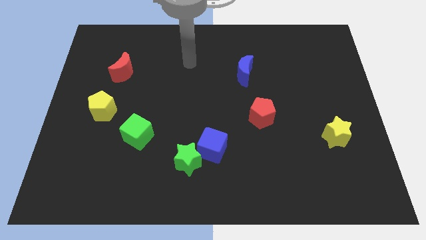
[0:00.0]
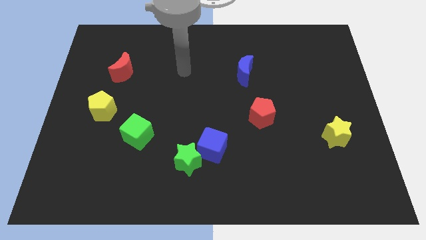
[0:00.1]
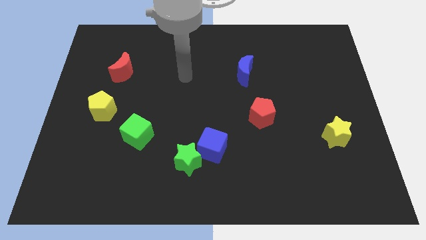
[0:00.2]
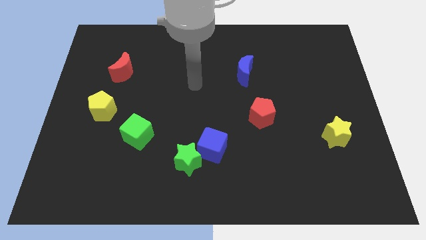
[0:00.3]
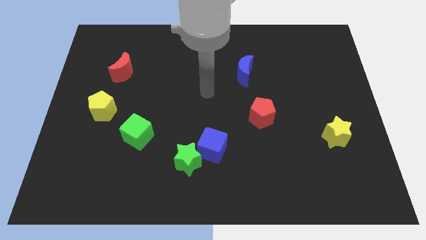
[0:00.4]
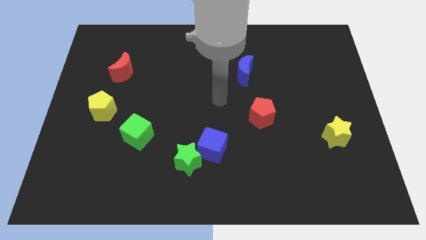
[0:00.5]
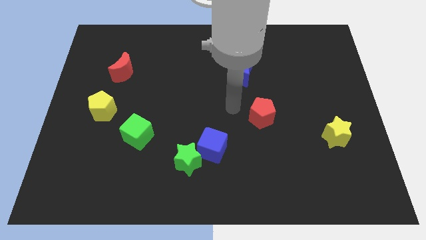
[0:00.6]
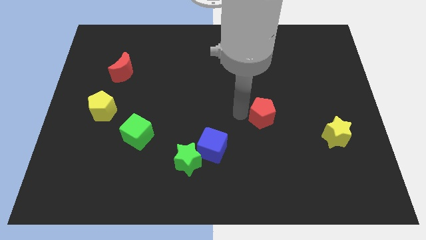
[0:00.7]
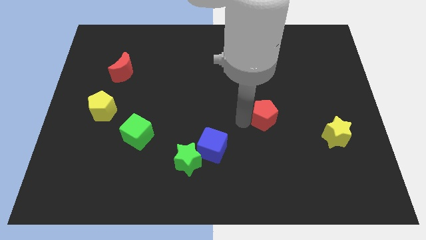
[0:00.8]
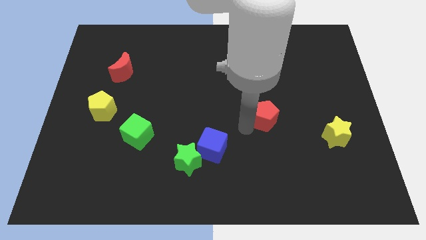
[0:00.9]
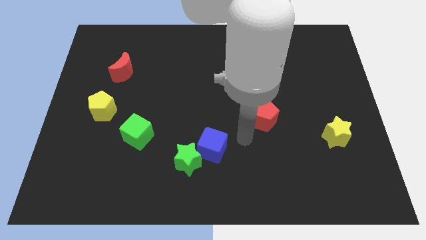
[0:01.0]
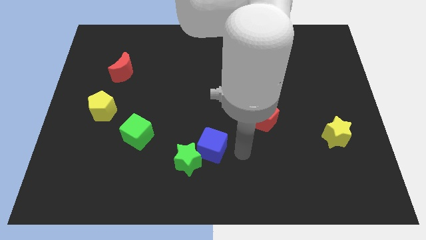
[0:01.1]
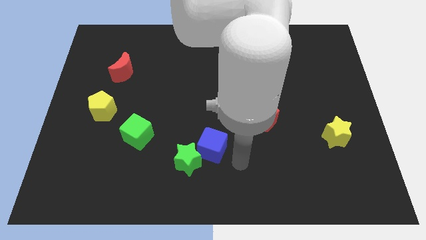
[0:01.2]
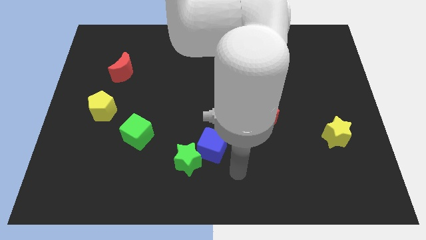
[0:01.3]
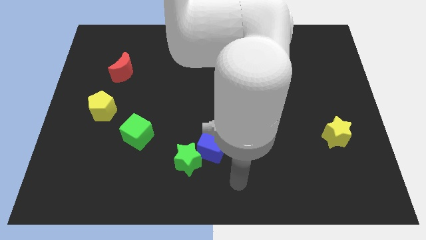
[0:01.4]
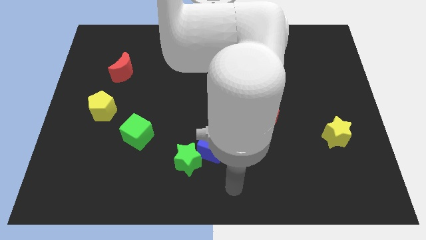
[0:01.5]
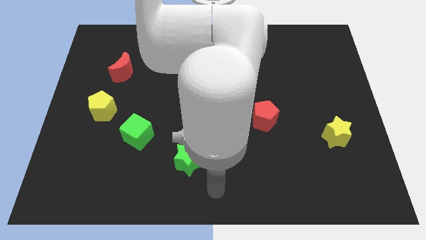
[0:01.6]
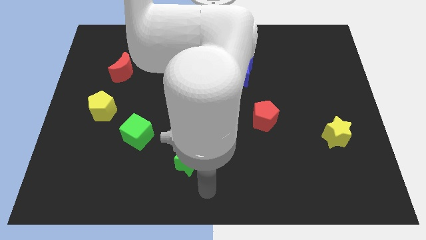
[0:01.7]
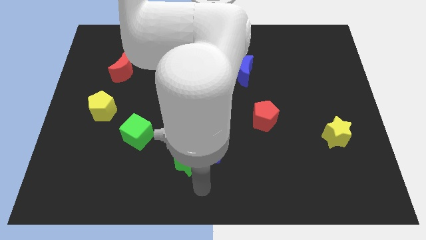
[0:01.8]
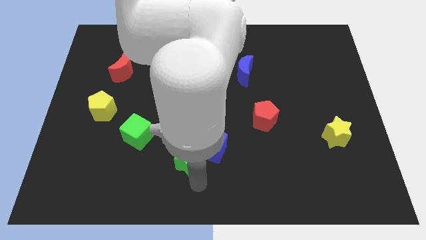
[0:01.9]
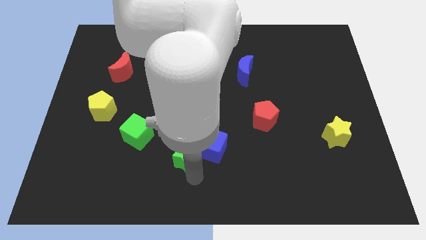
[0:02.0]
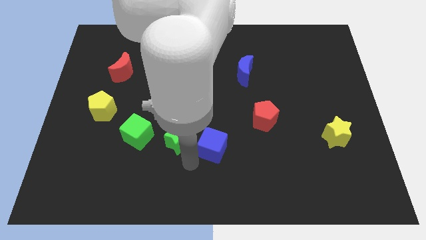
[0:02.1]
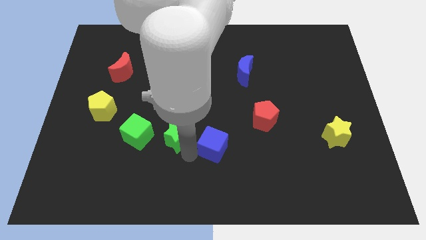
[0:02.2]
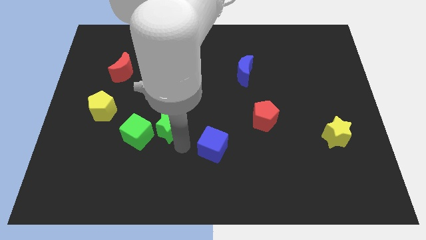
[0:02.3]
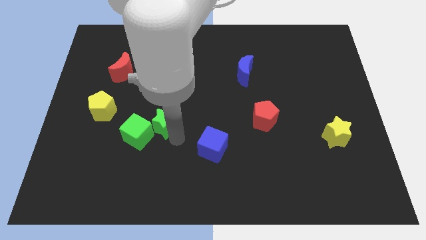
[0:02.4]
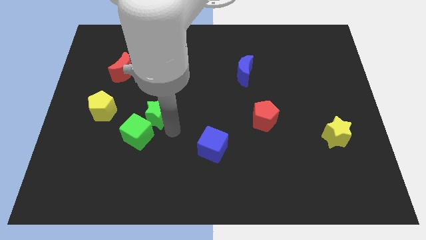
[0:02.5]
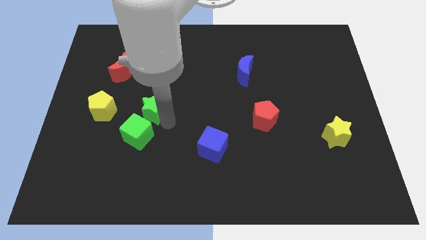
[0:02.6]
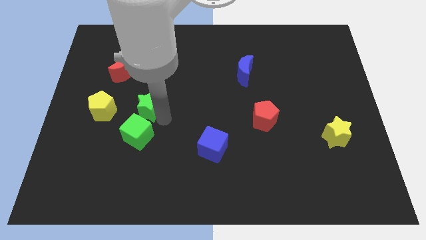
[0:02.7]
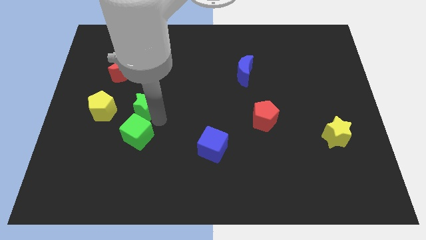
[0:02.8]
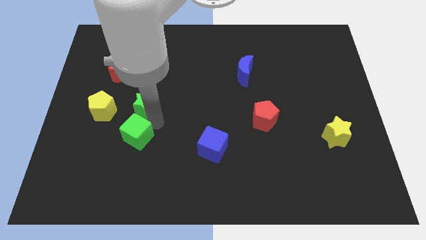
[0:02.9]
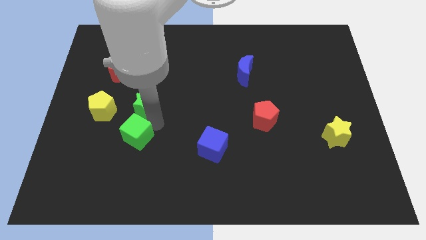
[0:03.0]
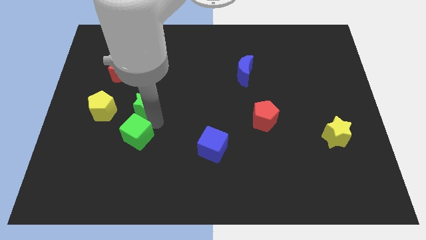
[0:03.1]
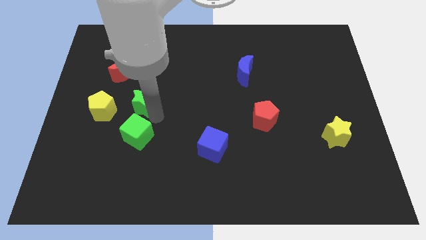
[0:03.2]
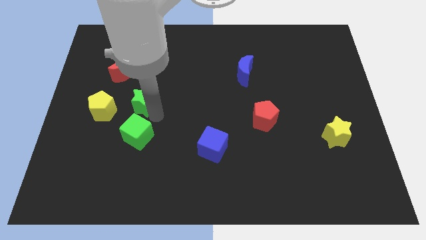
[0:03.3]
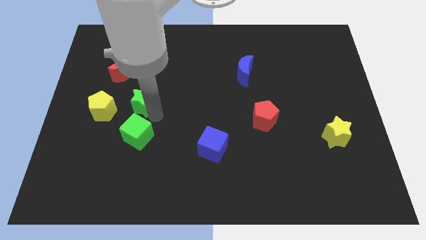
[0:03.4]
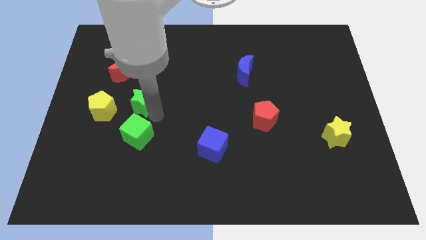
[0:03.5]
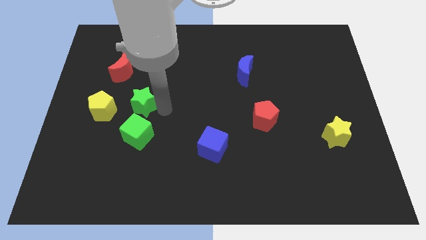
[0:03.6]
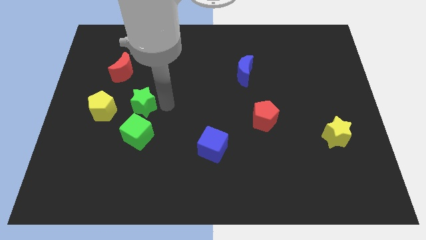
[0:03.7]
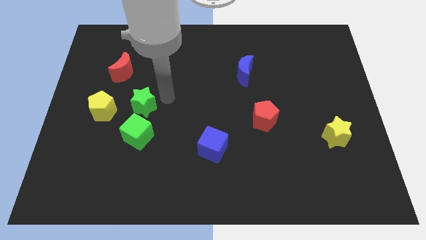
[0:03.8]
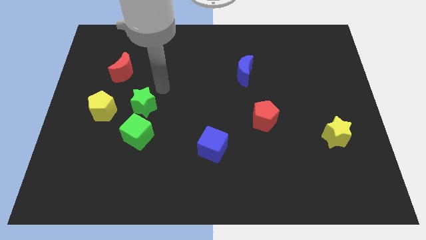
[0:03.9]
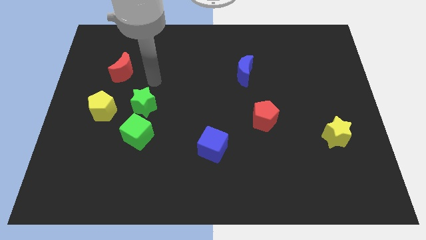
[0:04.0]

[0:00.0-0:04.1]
slide the green star to right of yellow pentagon

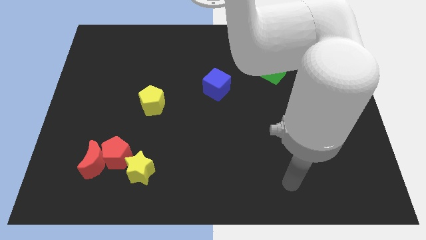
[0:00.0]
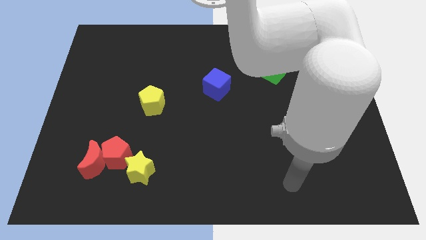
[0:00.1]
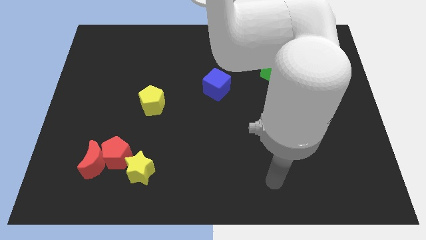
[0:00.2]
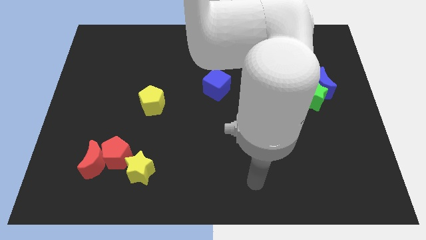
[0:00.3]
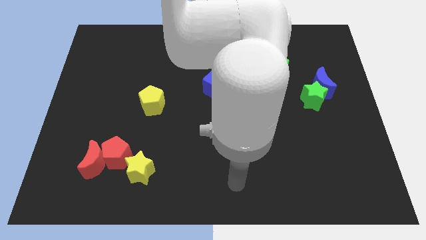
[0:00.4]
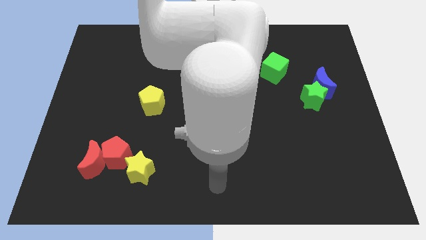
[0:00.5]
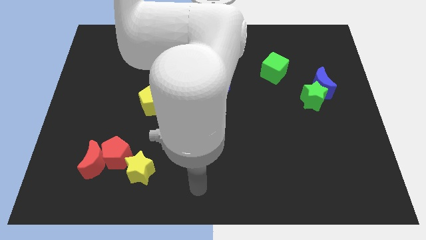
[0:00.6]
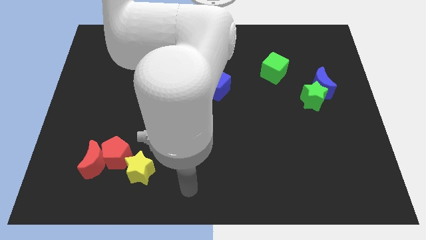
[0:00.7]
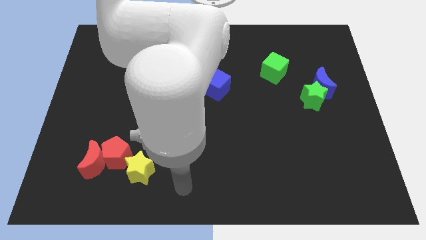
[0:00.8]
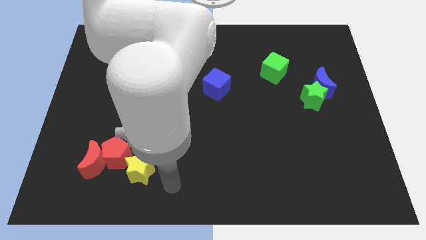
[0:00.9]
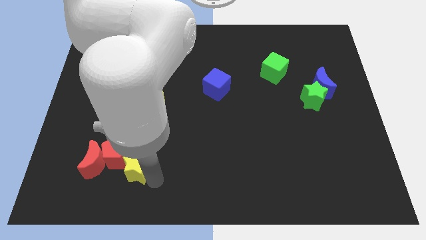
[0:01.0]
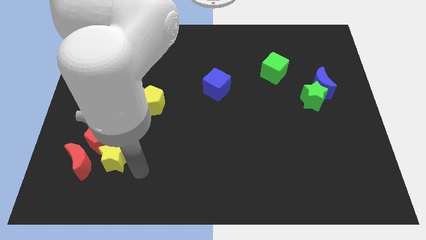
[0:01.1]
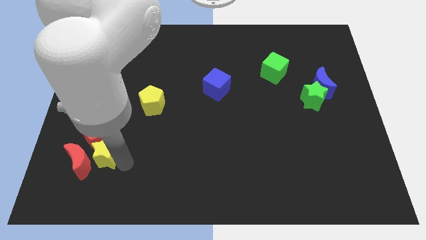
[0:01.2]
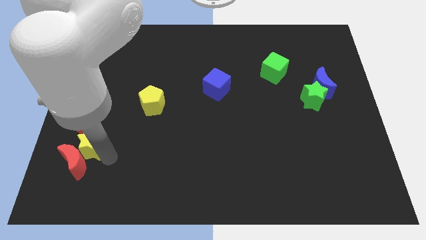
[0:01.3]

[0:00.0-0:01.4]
push yellow star towards red pentagon

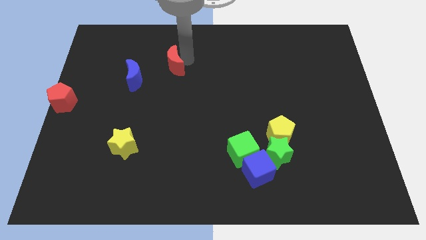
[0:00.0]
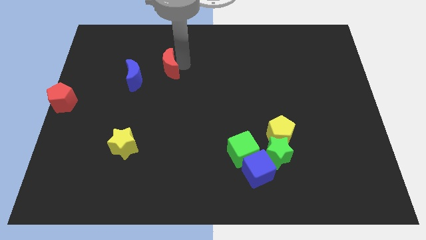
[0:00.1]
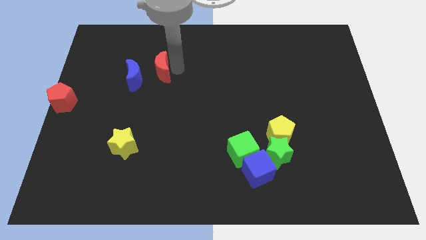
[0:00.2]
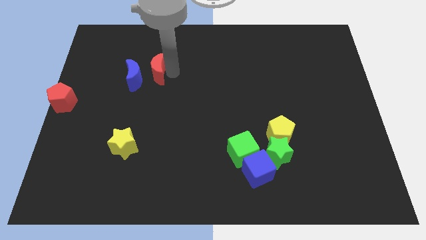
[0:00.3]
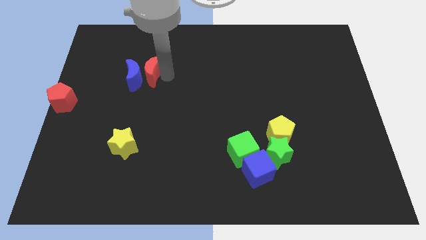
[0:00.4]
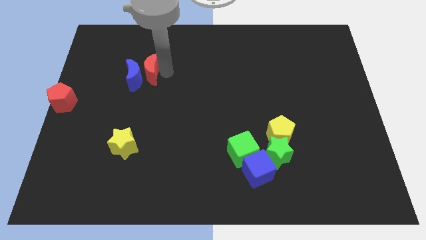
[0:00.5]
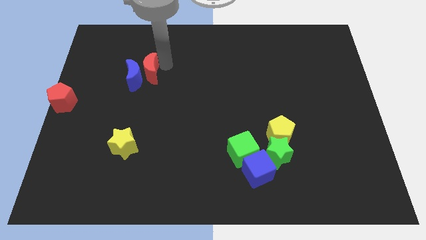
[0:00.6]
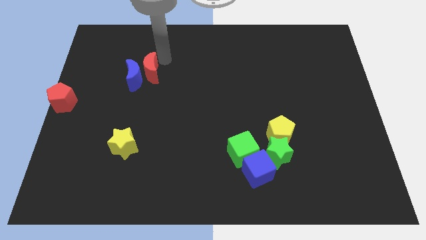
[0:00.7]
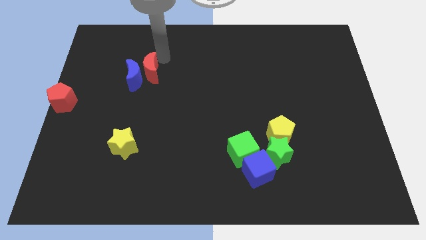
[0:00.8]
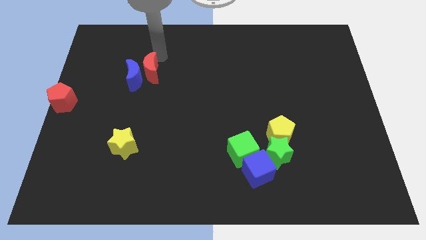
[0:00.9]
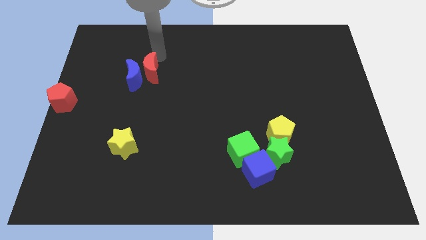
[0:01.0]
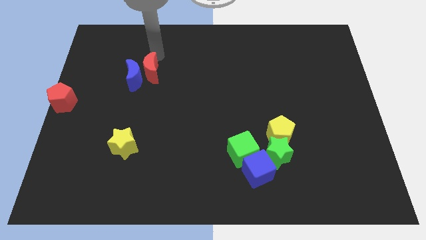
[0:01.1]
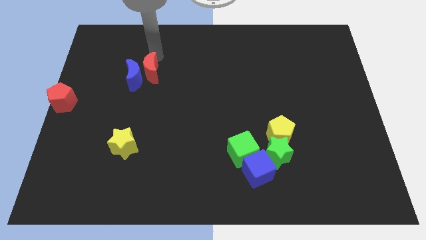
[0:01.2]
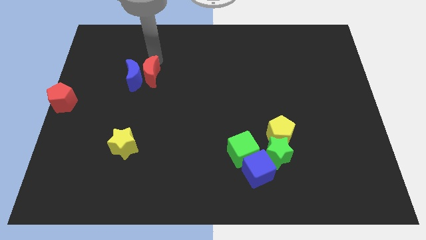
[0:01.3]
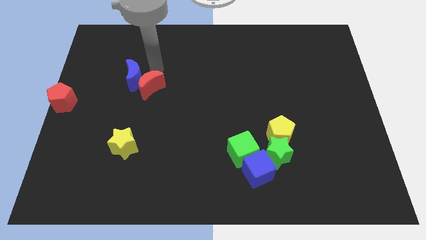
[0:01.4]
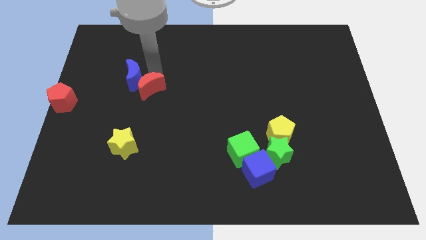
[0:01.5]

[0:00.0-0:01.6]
move the red crescent towards blue crescent

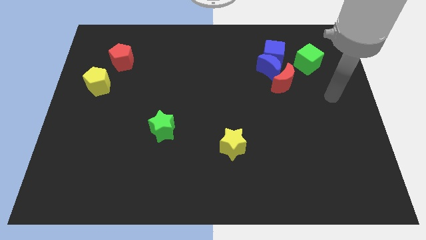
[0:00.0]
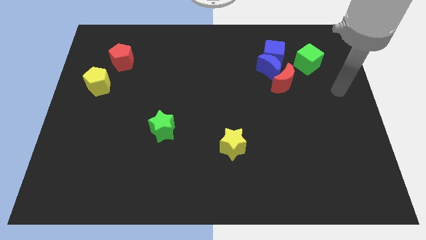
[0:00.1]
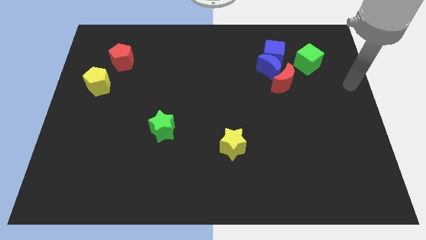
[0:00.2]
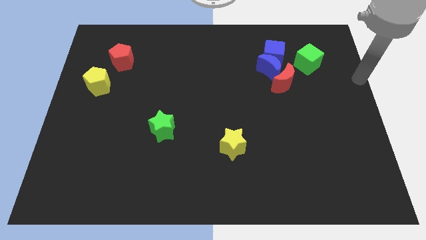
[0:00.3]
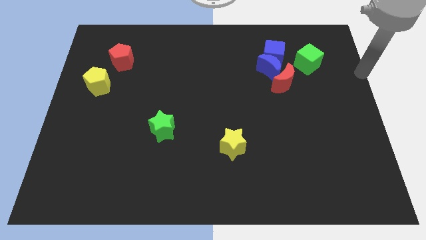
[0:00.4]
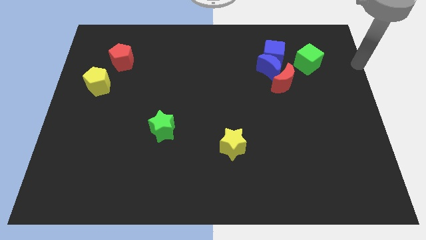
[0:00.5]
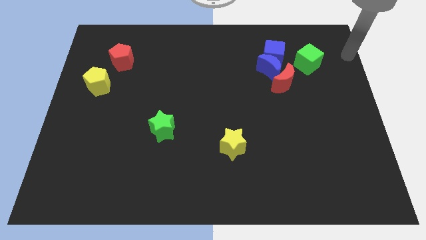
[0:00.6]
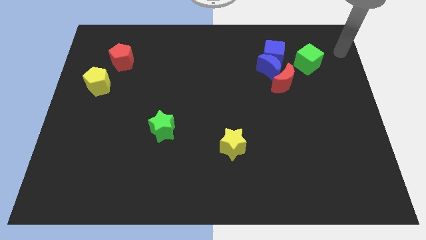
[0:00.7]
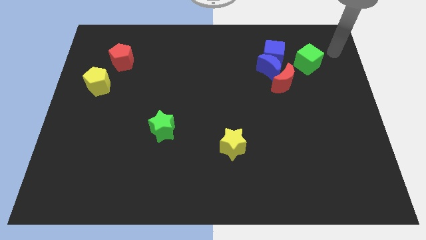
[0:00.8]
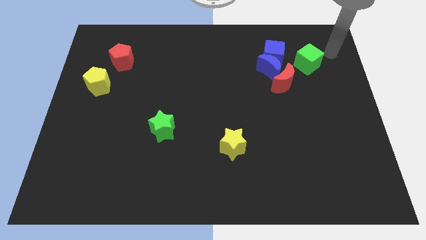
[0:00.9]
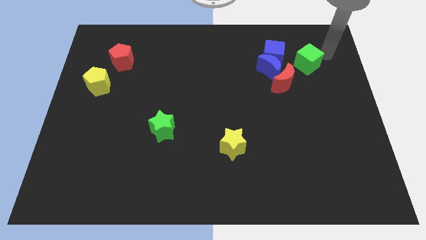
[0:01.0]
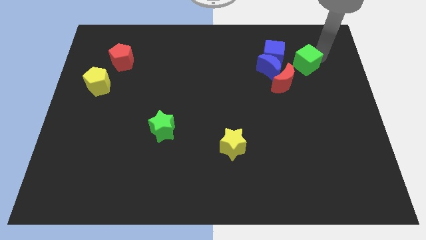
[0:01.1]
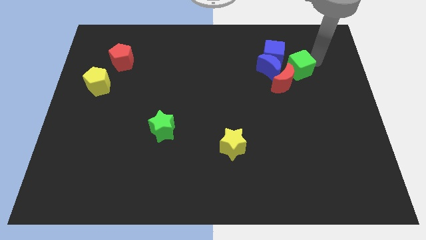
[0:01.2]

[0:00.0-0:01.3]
tap the top right side of the green cube

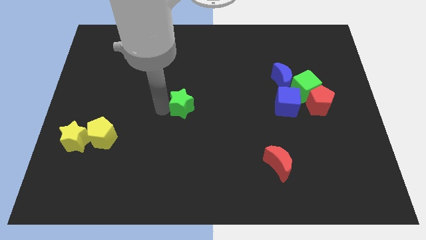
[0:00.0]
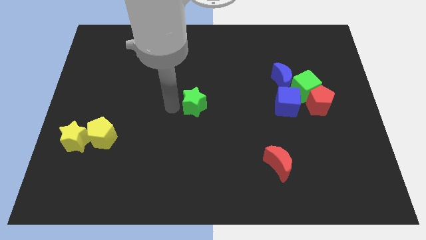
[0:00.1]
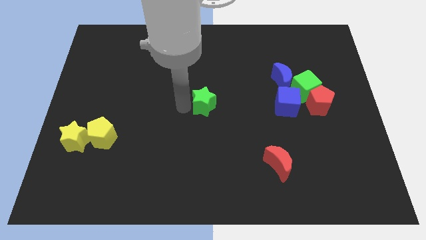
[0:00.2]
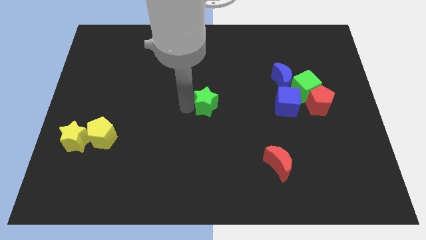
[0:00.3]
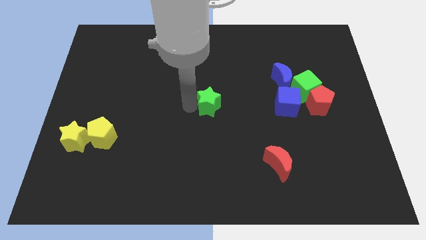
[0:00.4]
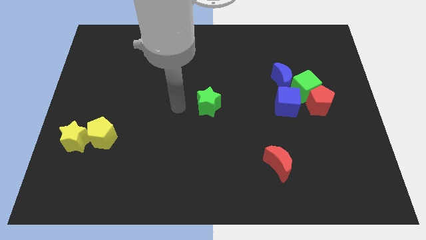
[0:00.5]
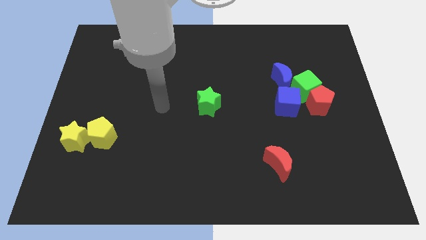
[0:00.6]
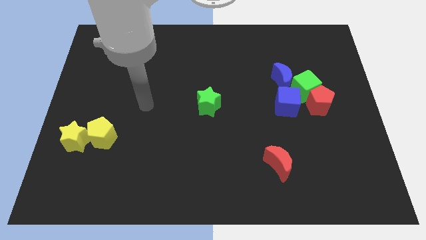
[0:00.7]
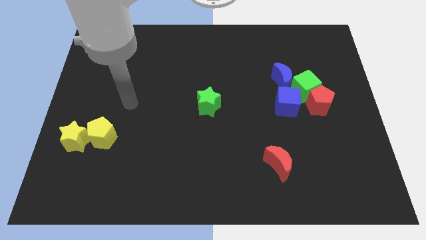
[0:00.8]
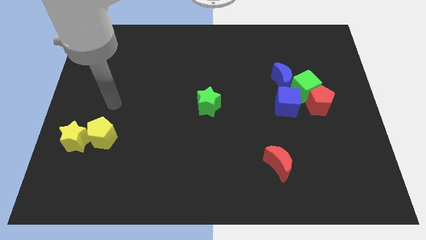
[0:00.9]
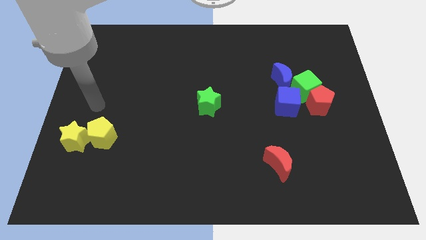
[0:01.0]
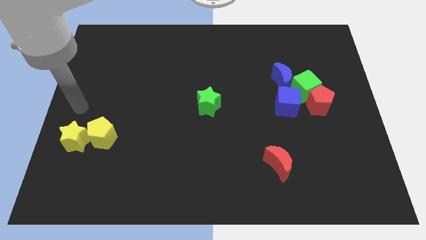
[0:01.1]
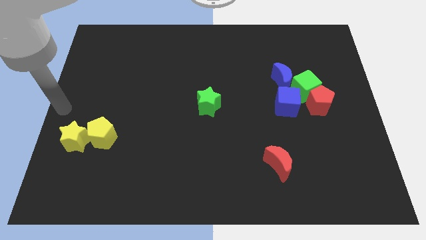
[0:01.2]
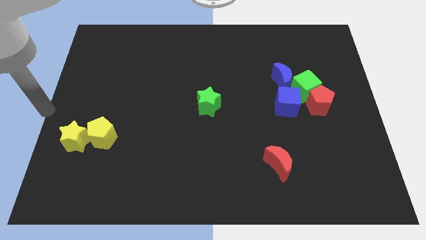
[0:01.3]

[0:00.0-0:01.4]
move your arm at the left center of the board
